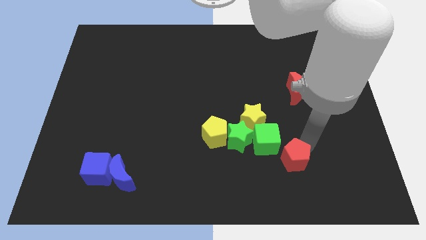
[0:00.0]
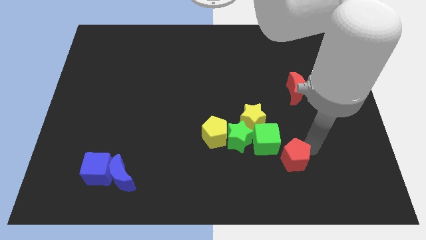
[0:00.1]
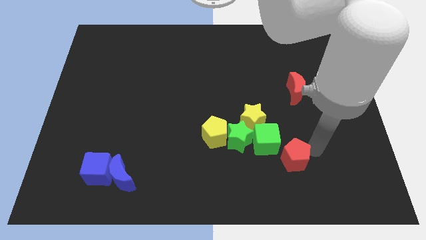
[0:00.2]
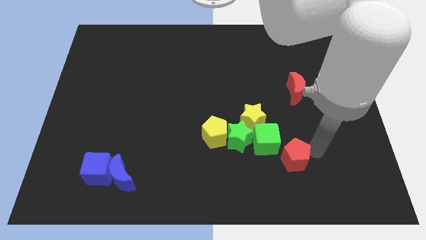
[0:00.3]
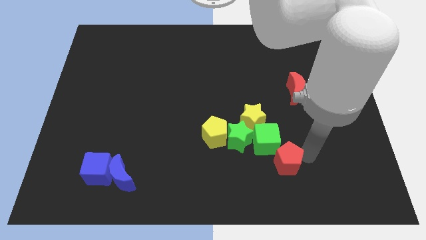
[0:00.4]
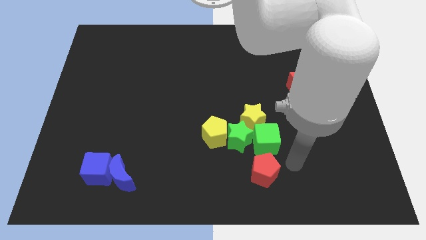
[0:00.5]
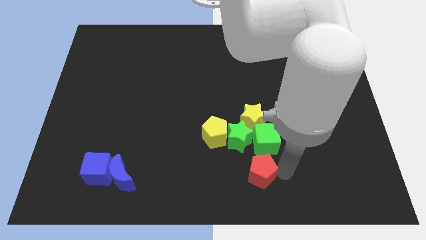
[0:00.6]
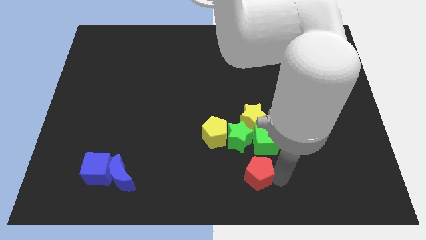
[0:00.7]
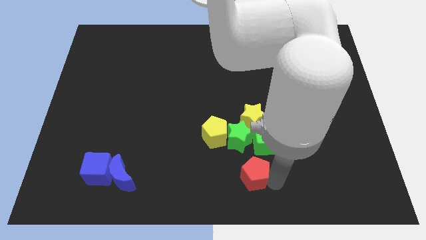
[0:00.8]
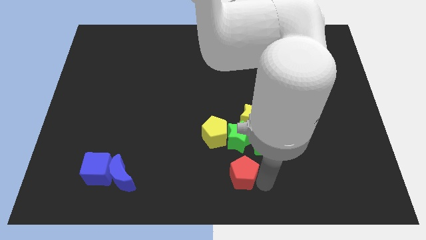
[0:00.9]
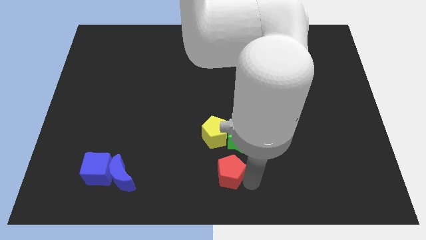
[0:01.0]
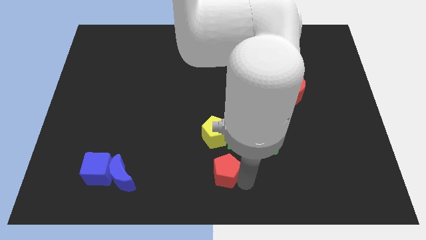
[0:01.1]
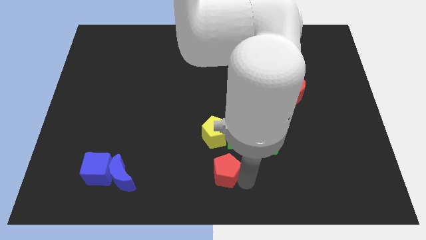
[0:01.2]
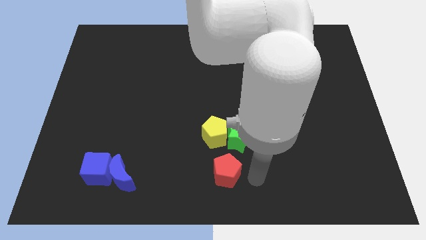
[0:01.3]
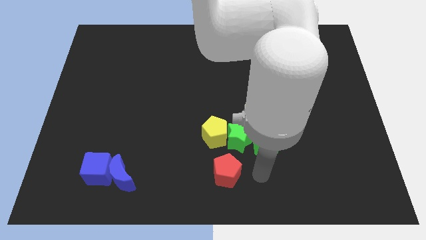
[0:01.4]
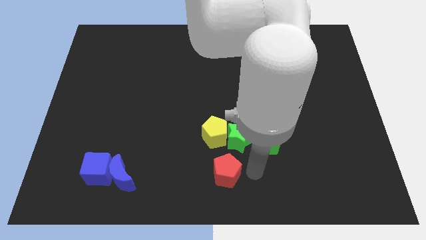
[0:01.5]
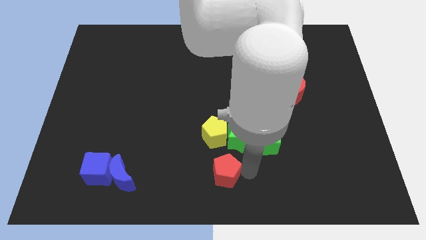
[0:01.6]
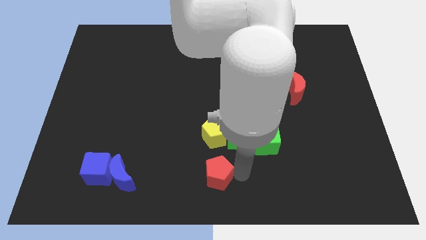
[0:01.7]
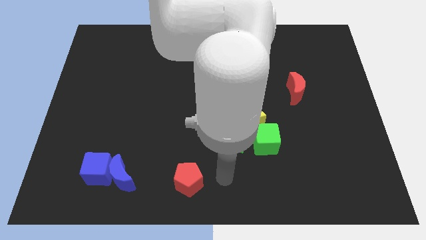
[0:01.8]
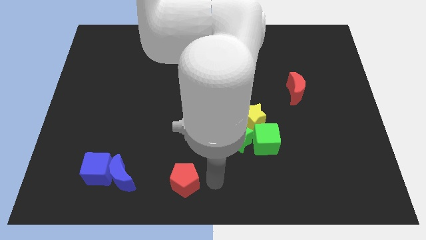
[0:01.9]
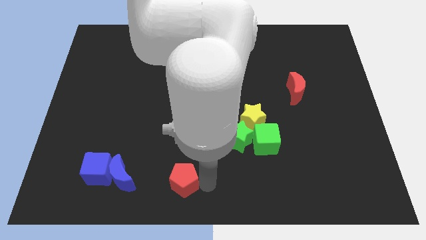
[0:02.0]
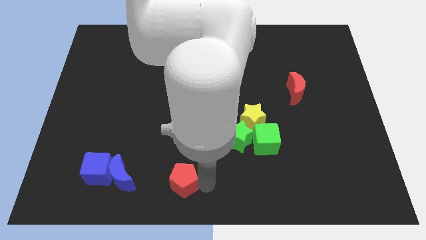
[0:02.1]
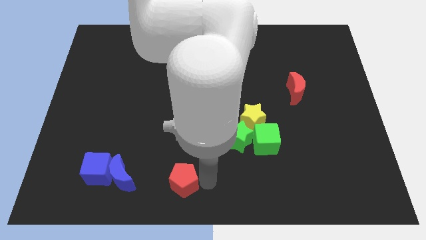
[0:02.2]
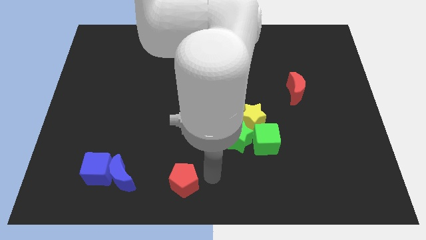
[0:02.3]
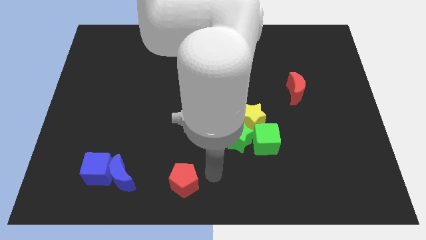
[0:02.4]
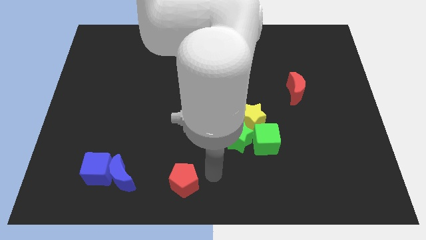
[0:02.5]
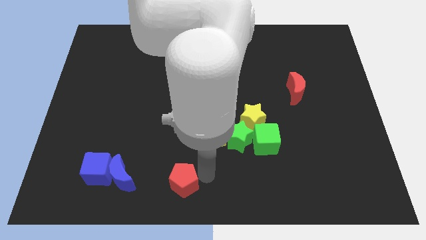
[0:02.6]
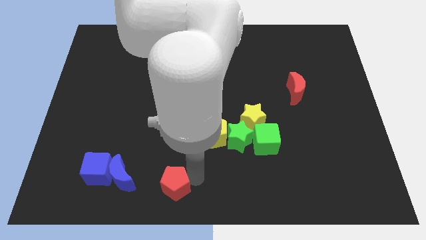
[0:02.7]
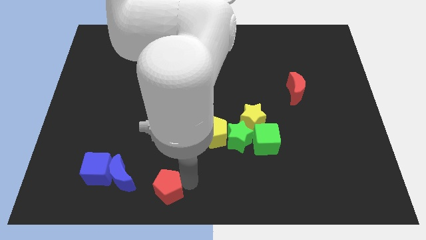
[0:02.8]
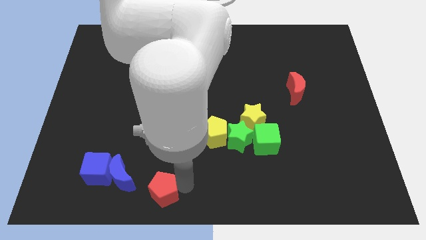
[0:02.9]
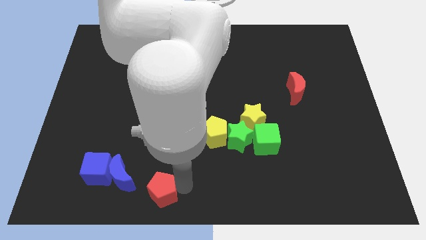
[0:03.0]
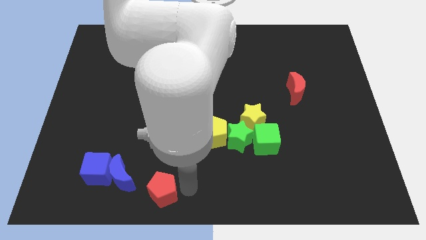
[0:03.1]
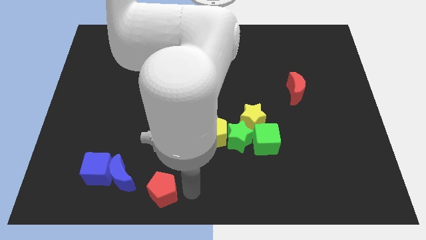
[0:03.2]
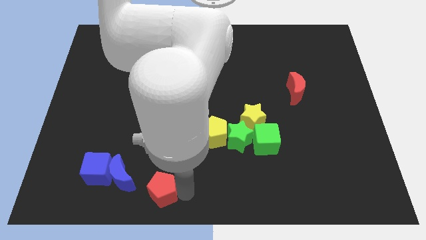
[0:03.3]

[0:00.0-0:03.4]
move red pentagon to the bottom

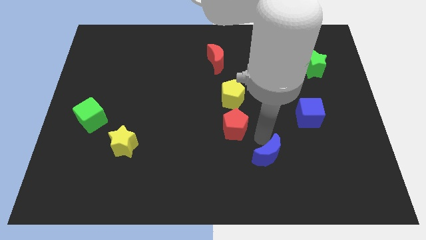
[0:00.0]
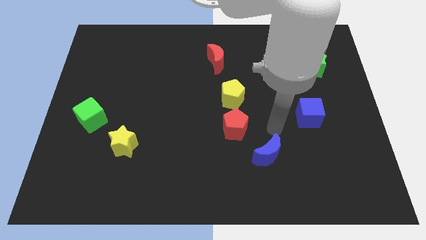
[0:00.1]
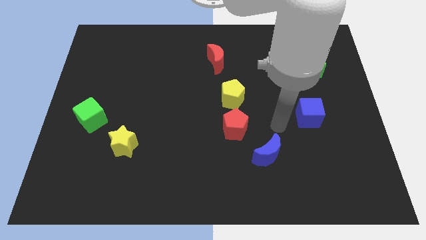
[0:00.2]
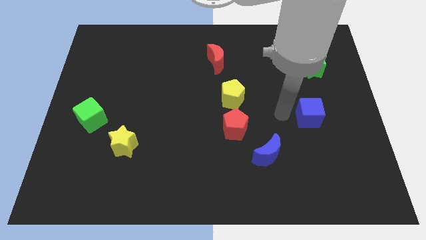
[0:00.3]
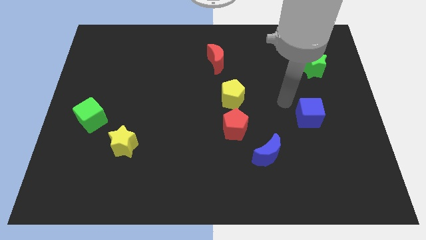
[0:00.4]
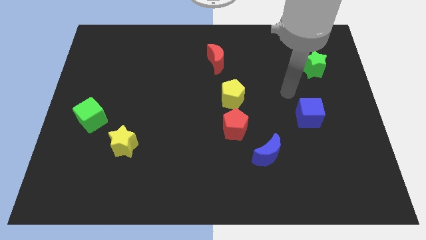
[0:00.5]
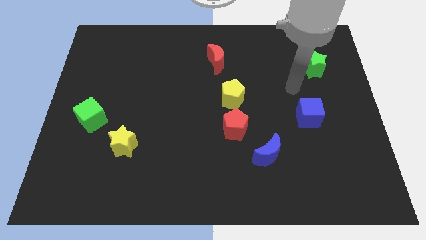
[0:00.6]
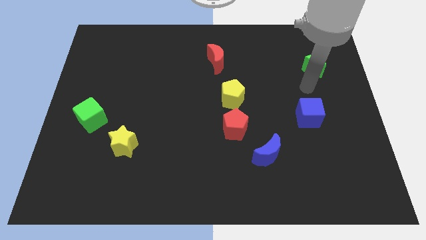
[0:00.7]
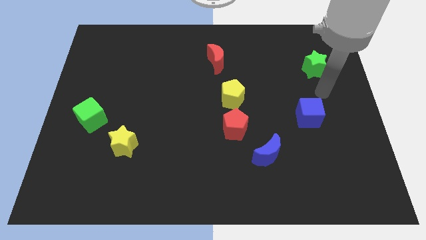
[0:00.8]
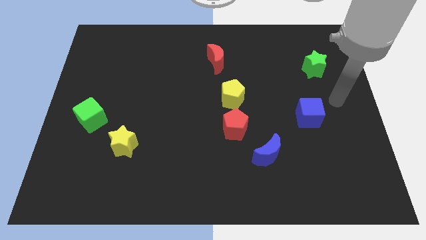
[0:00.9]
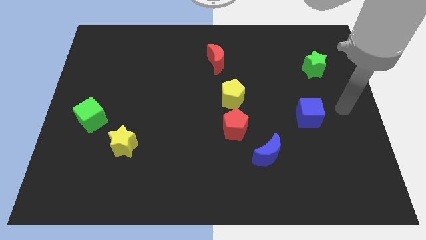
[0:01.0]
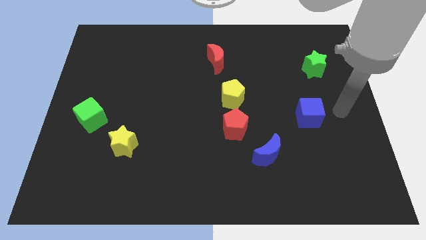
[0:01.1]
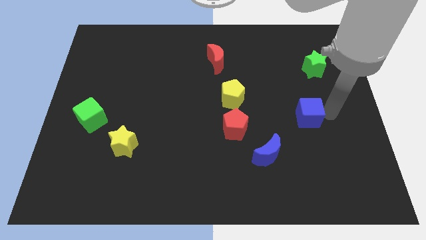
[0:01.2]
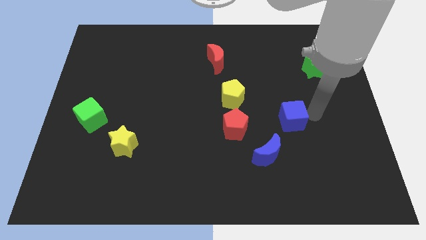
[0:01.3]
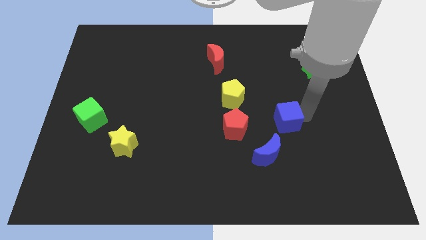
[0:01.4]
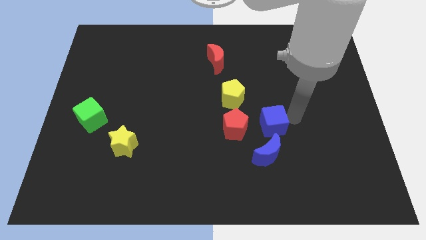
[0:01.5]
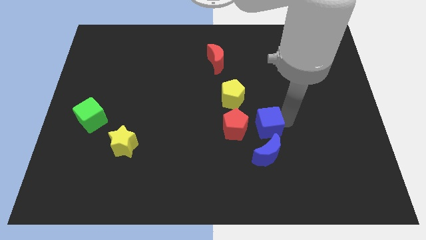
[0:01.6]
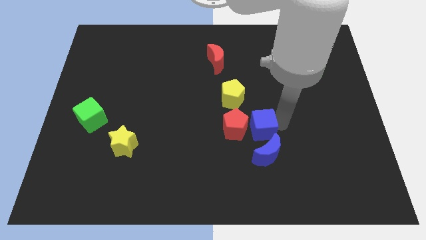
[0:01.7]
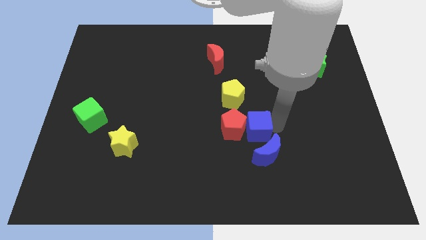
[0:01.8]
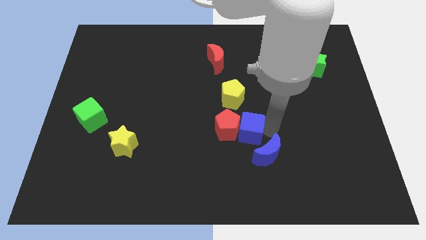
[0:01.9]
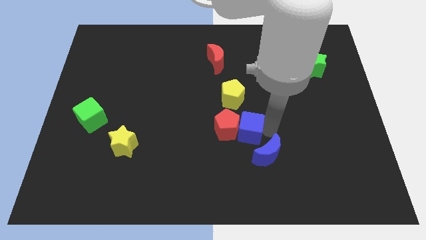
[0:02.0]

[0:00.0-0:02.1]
move the blue cube into red pentagon to the right

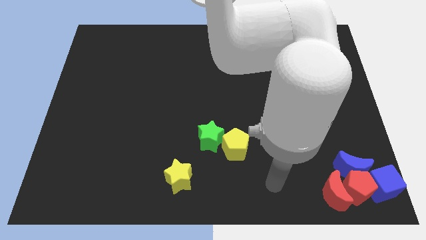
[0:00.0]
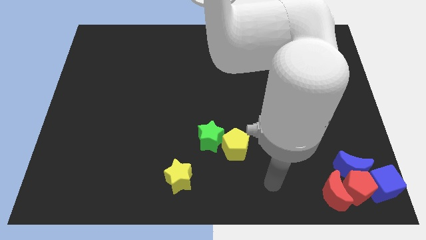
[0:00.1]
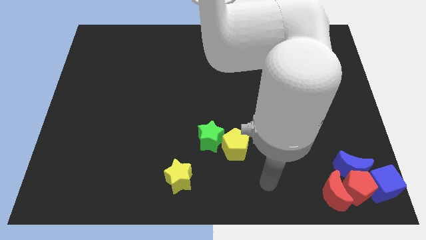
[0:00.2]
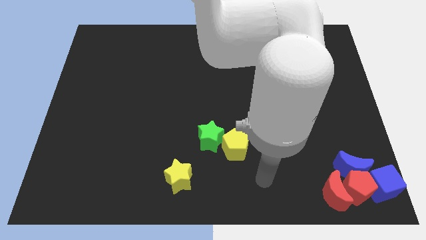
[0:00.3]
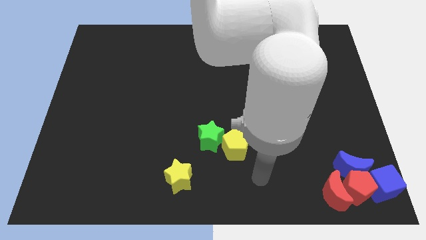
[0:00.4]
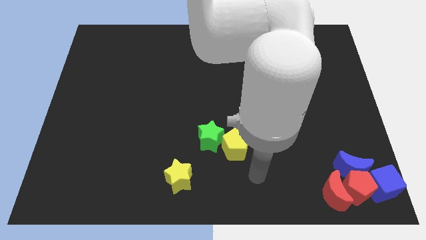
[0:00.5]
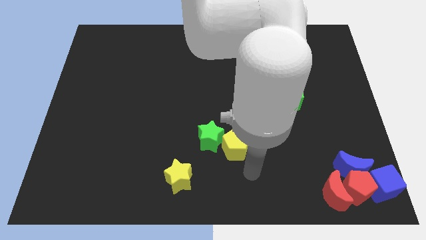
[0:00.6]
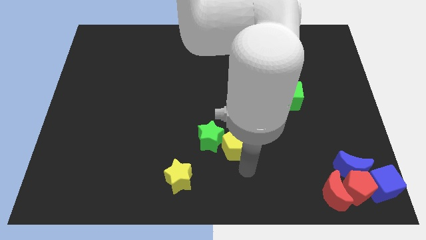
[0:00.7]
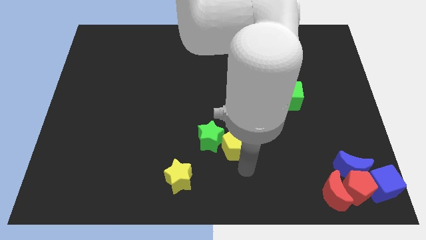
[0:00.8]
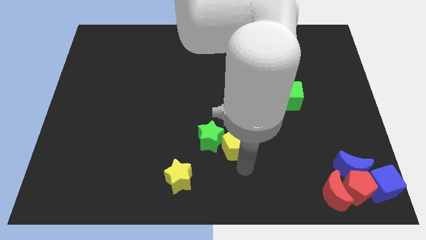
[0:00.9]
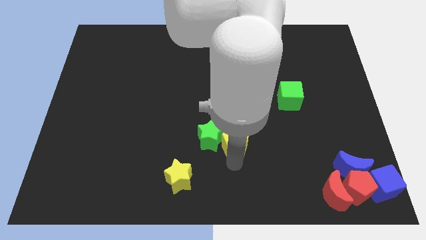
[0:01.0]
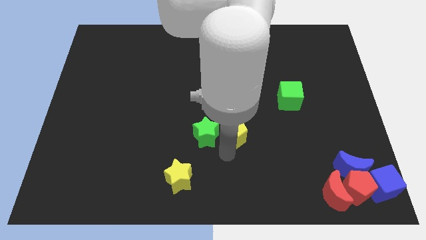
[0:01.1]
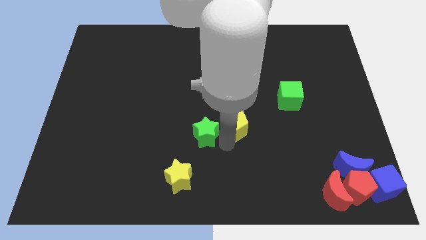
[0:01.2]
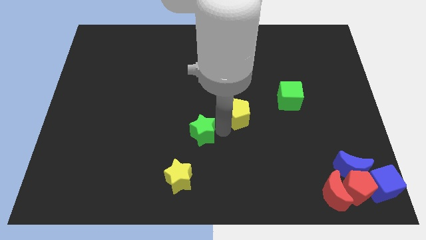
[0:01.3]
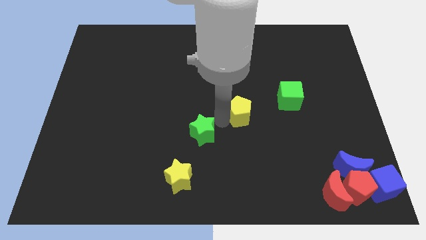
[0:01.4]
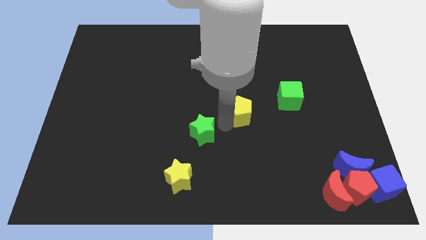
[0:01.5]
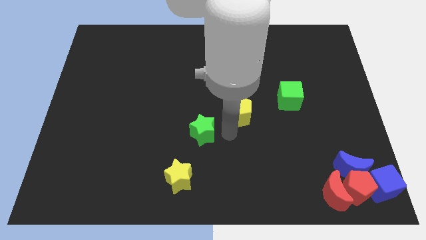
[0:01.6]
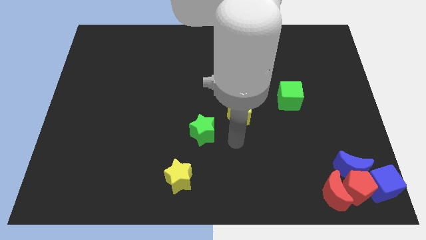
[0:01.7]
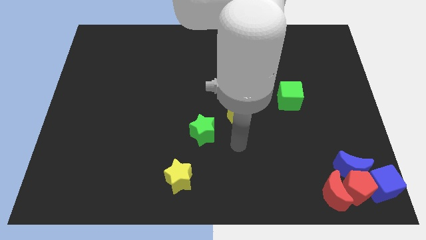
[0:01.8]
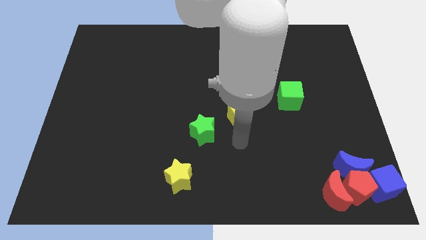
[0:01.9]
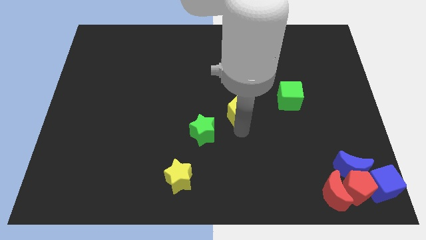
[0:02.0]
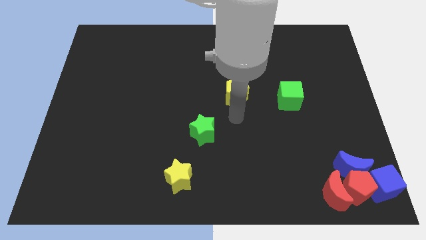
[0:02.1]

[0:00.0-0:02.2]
move the yellow pentagon to the left of the green cube

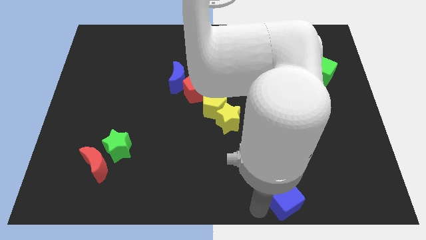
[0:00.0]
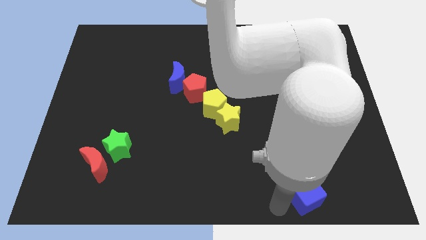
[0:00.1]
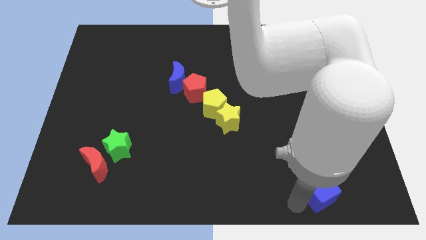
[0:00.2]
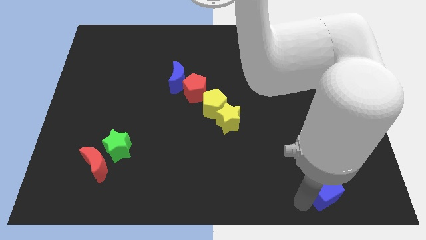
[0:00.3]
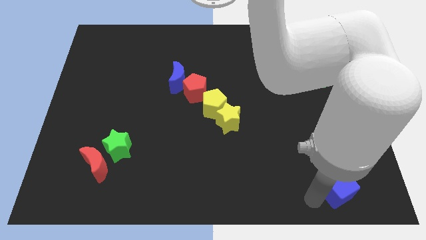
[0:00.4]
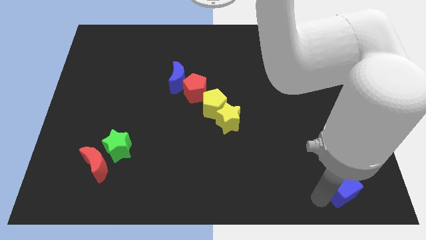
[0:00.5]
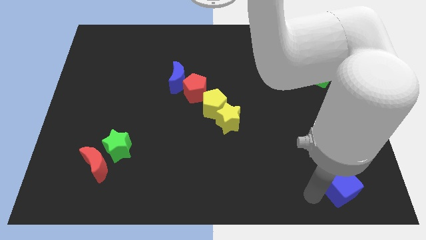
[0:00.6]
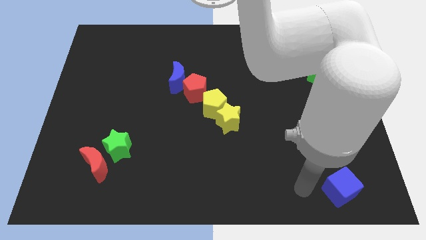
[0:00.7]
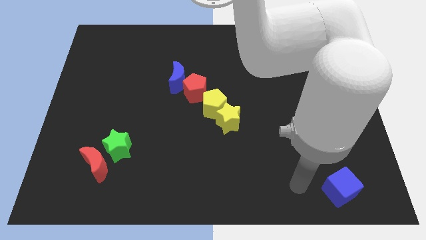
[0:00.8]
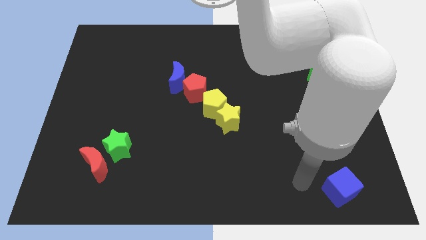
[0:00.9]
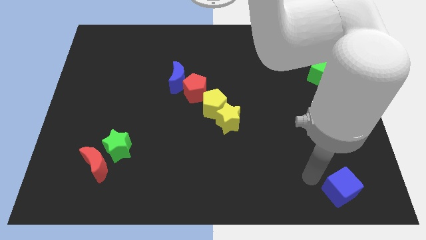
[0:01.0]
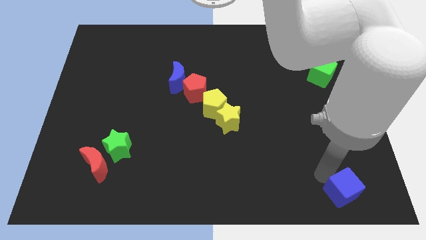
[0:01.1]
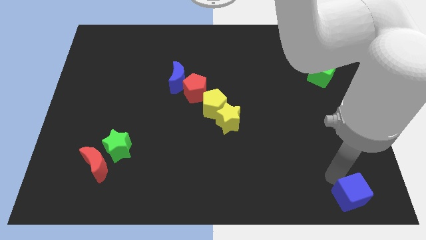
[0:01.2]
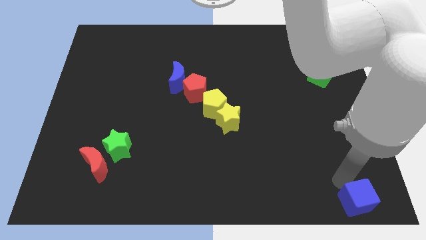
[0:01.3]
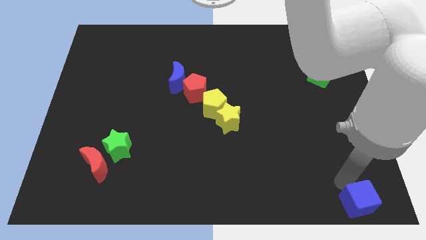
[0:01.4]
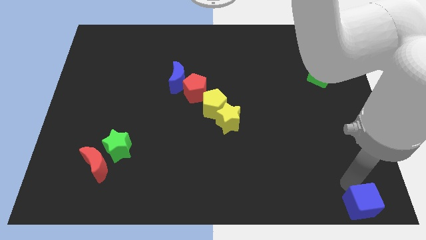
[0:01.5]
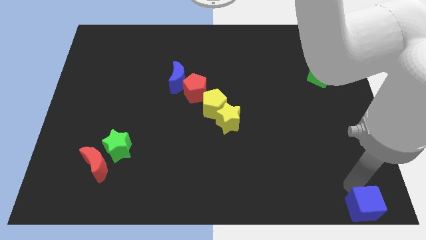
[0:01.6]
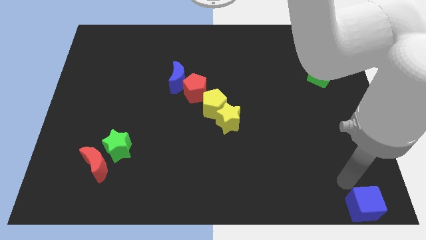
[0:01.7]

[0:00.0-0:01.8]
push the blue cube bottom right to the board
